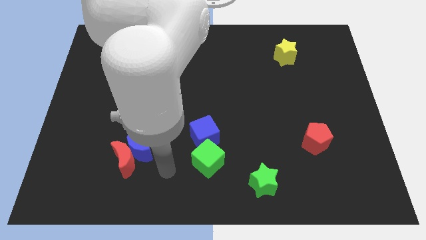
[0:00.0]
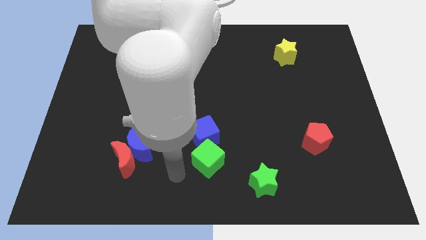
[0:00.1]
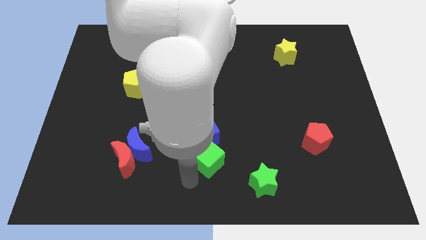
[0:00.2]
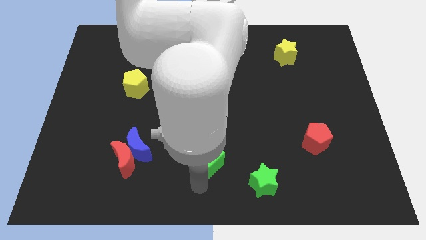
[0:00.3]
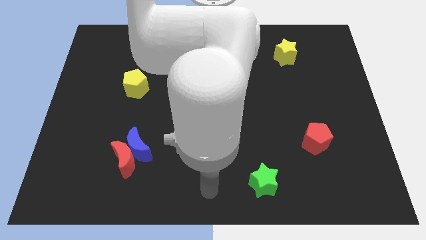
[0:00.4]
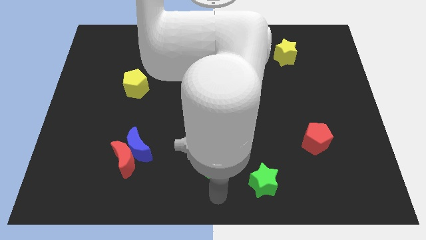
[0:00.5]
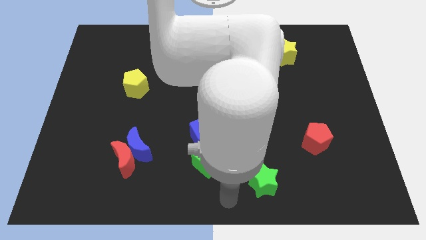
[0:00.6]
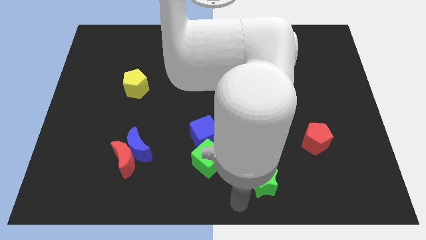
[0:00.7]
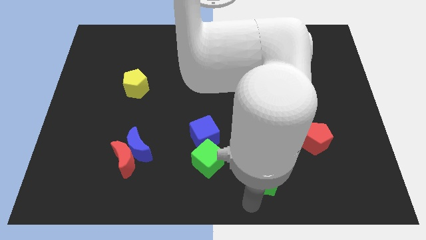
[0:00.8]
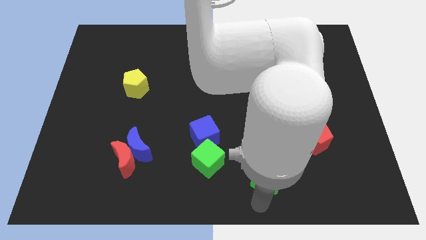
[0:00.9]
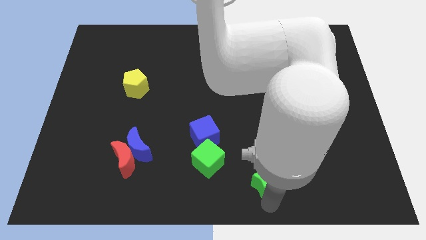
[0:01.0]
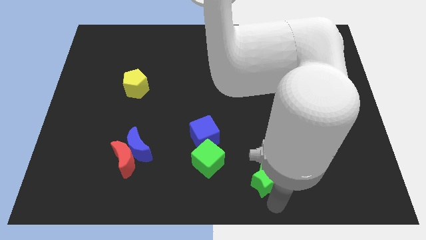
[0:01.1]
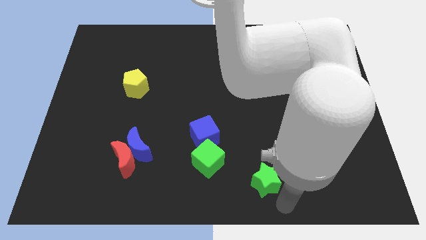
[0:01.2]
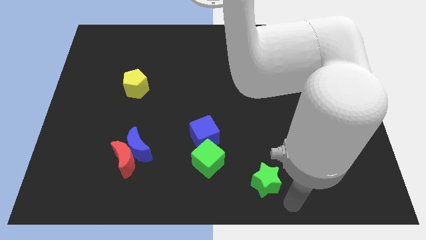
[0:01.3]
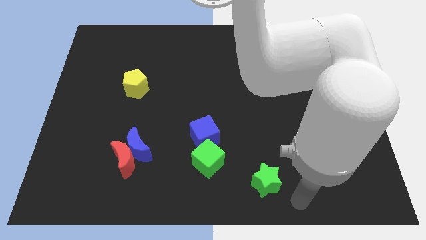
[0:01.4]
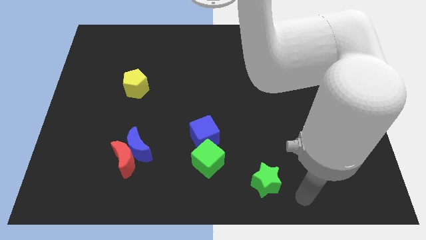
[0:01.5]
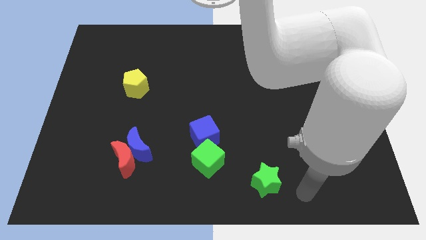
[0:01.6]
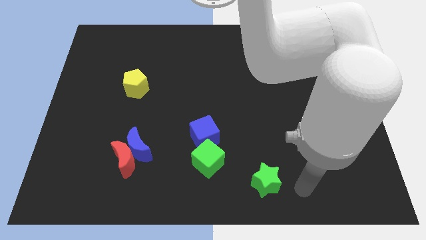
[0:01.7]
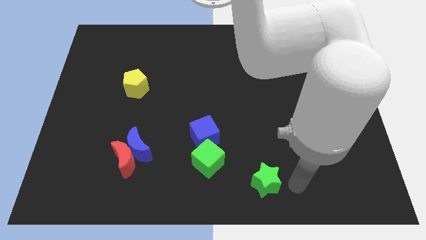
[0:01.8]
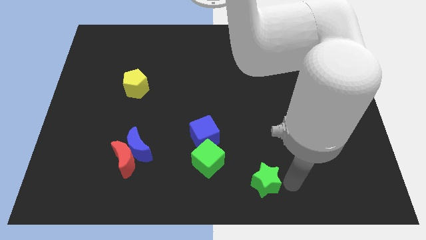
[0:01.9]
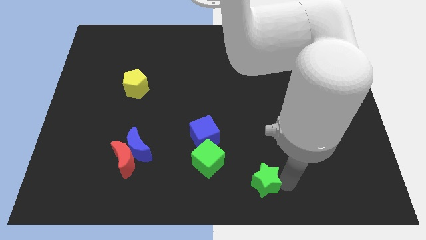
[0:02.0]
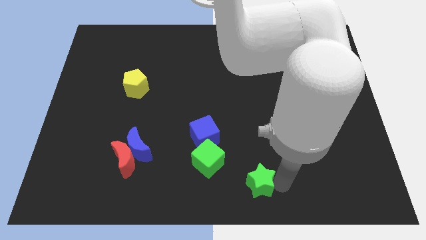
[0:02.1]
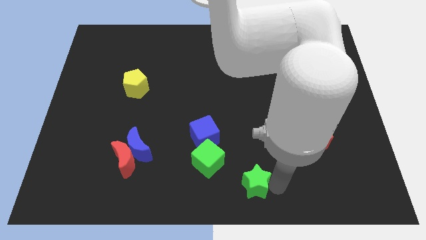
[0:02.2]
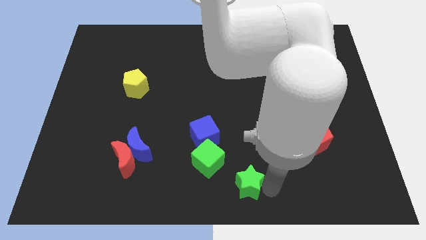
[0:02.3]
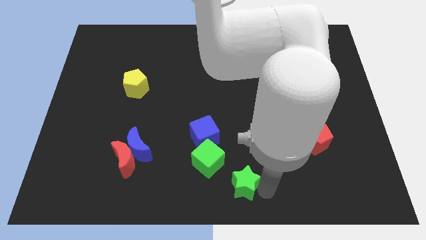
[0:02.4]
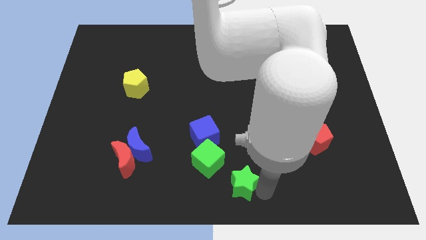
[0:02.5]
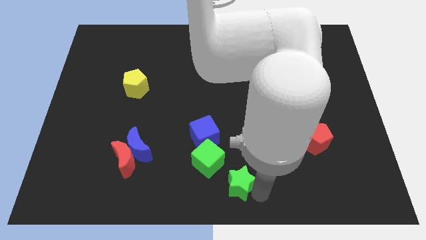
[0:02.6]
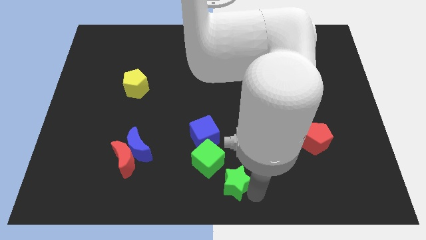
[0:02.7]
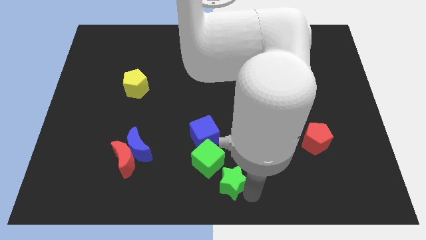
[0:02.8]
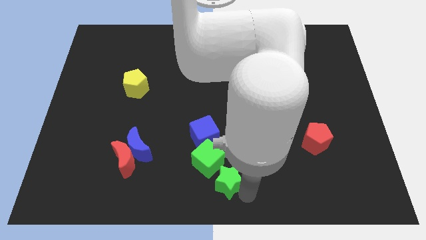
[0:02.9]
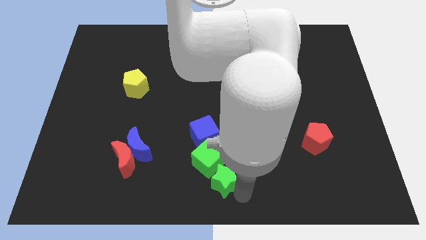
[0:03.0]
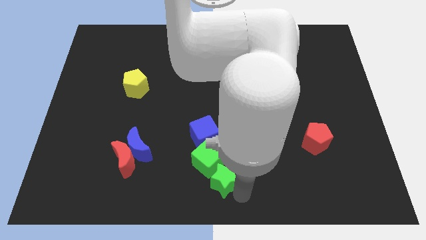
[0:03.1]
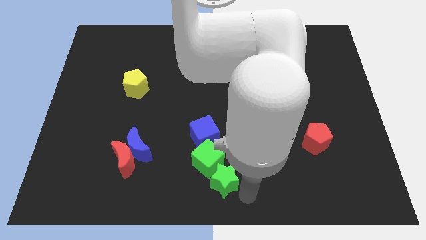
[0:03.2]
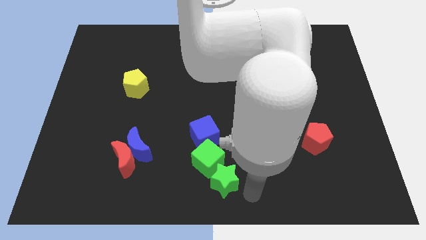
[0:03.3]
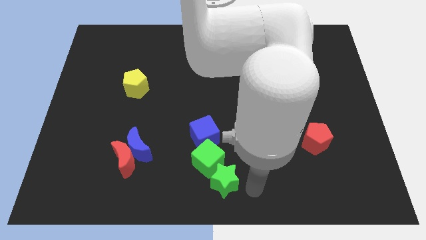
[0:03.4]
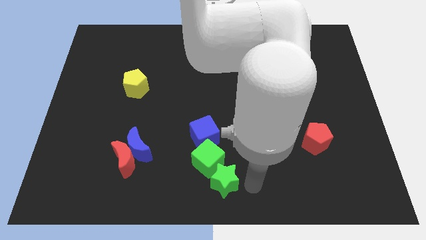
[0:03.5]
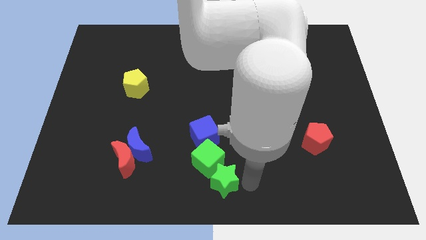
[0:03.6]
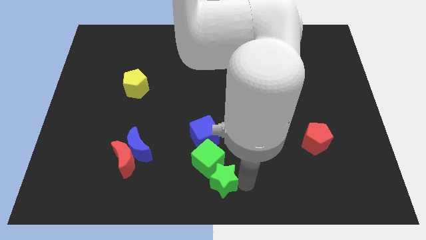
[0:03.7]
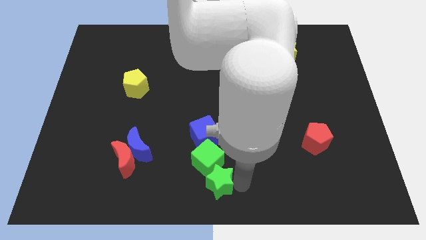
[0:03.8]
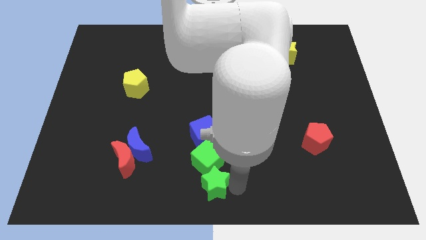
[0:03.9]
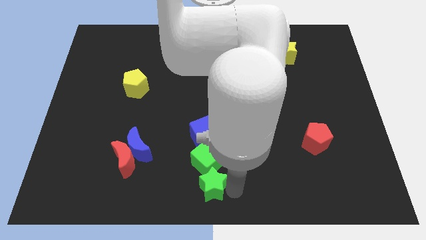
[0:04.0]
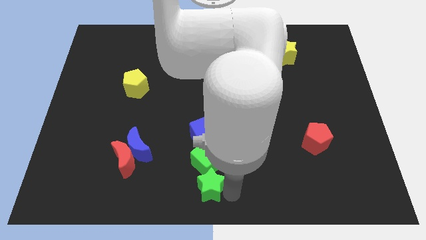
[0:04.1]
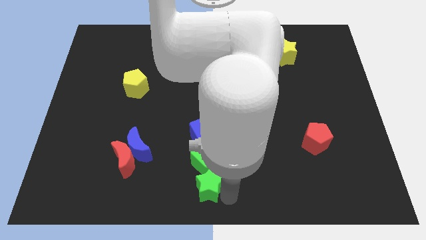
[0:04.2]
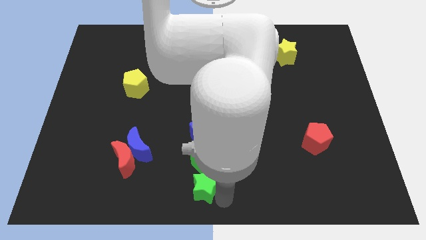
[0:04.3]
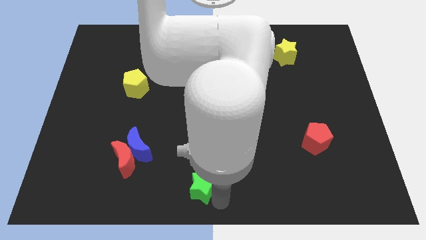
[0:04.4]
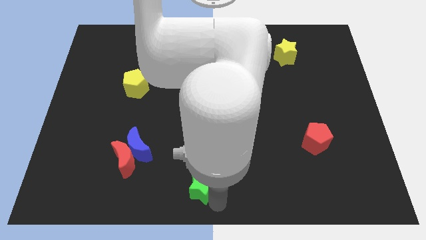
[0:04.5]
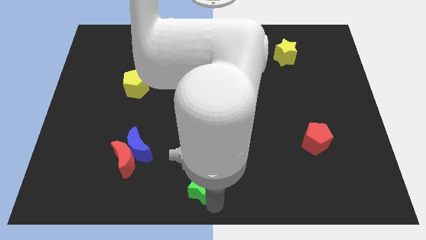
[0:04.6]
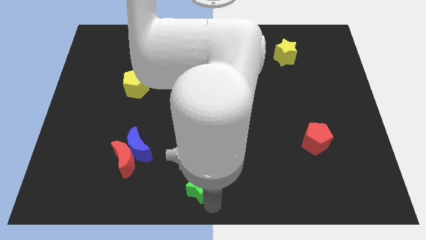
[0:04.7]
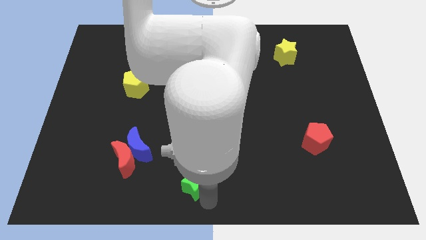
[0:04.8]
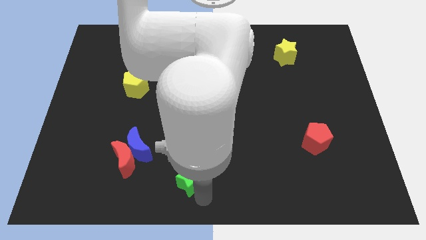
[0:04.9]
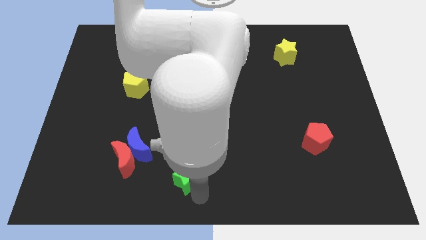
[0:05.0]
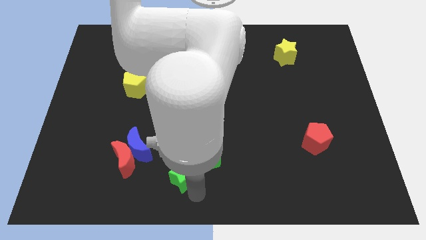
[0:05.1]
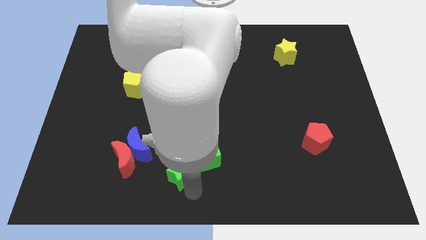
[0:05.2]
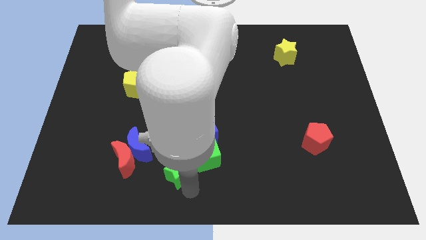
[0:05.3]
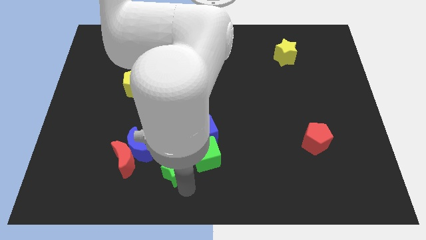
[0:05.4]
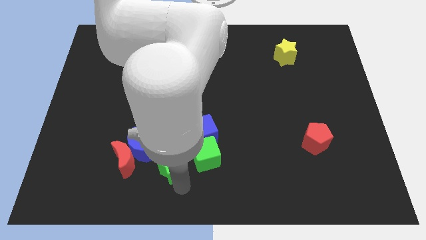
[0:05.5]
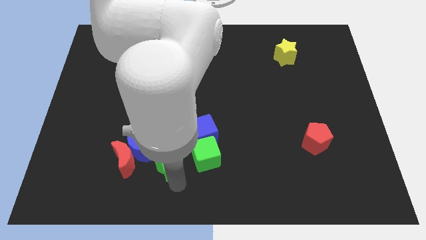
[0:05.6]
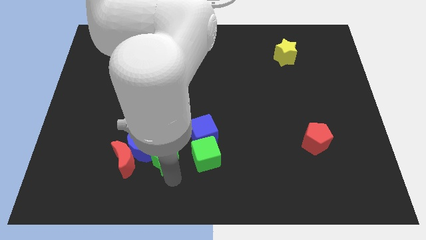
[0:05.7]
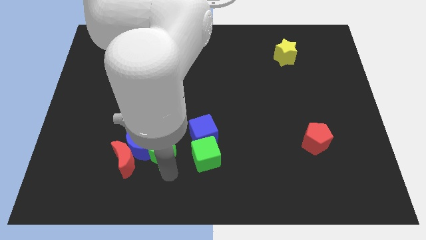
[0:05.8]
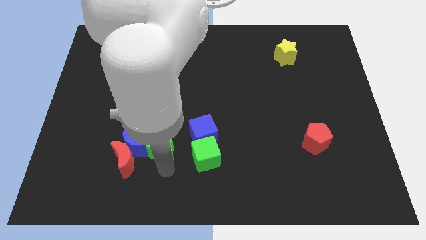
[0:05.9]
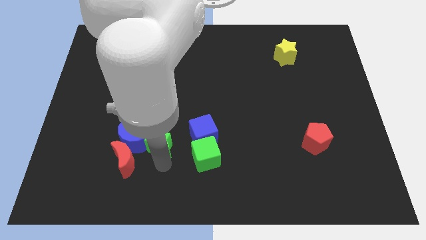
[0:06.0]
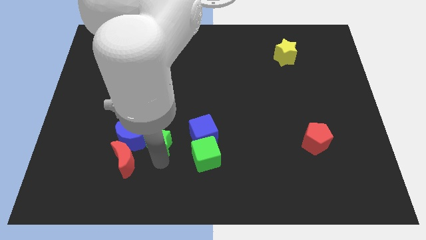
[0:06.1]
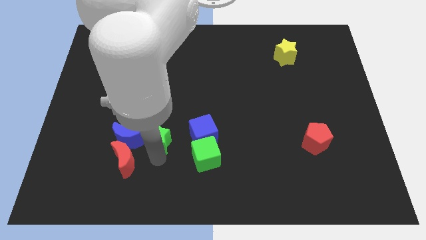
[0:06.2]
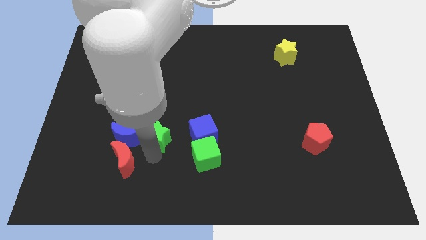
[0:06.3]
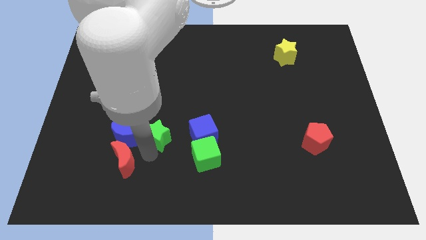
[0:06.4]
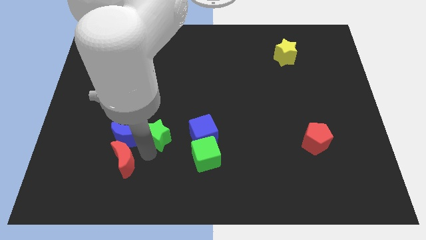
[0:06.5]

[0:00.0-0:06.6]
push the green star next to the blue moon

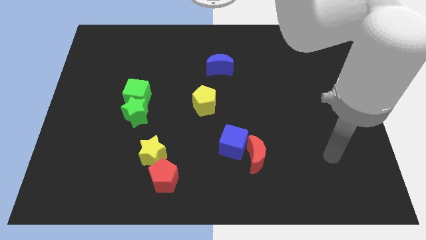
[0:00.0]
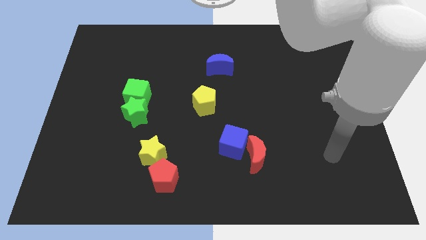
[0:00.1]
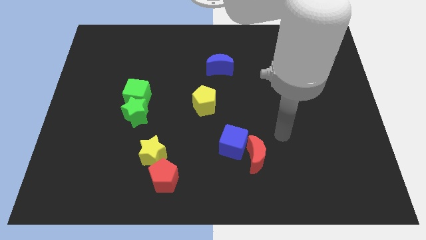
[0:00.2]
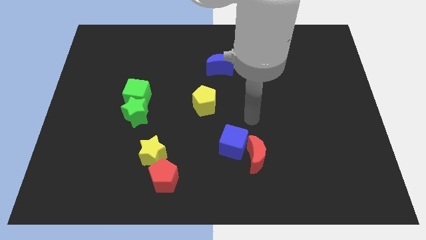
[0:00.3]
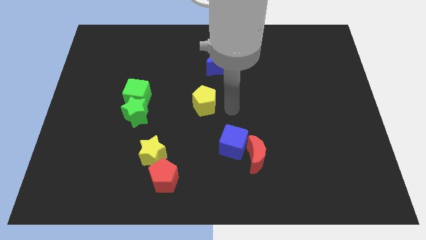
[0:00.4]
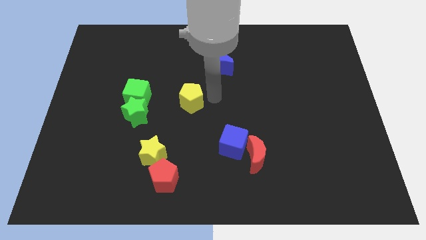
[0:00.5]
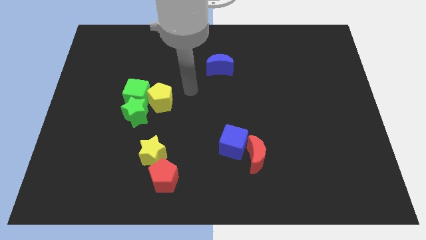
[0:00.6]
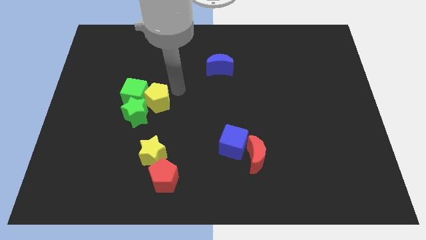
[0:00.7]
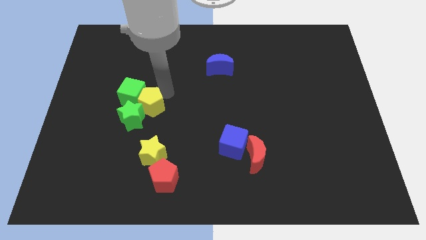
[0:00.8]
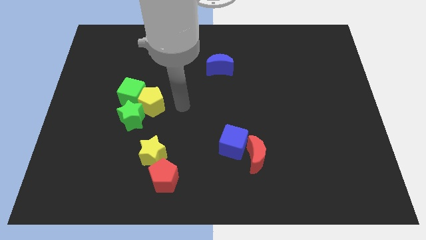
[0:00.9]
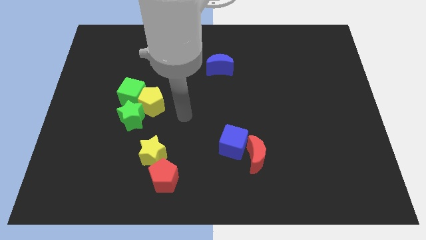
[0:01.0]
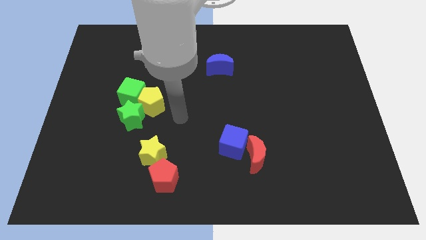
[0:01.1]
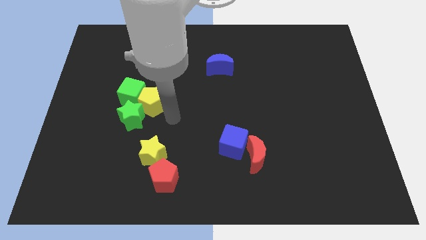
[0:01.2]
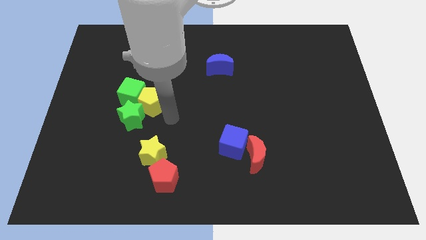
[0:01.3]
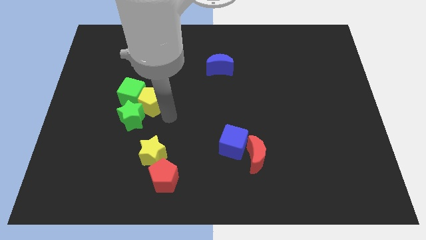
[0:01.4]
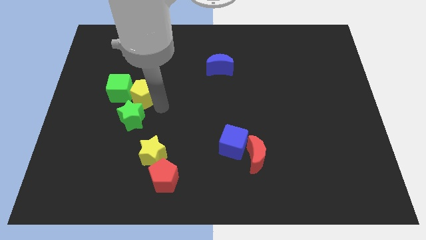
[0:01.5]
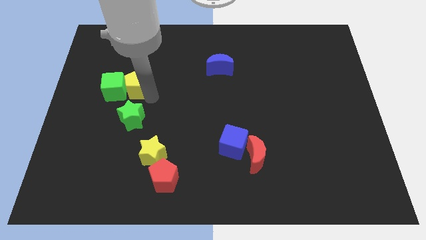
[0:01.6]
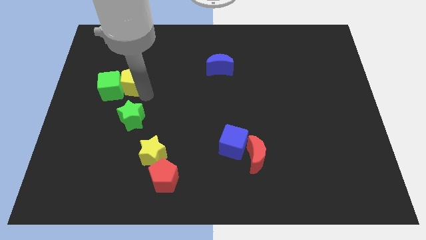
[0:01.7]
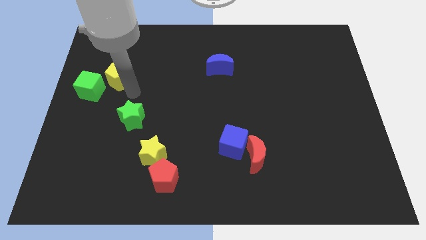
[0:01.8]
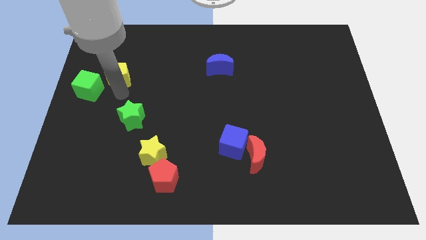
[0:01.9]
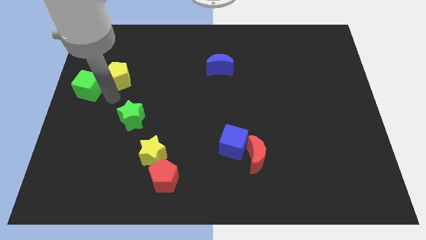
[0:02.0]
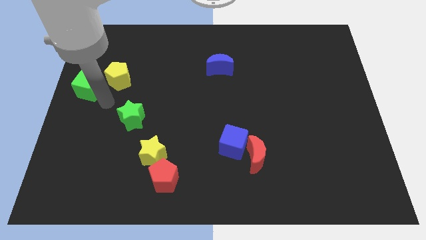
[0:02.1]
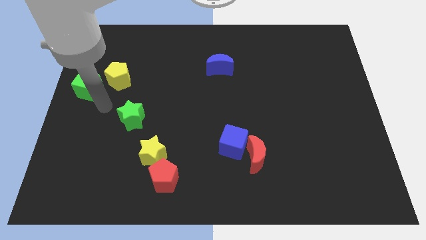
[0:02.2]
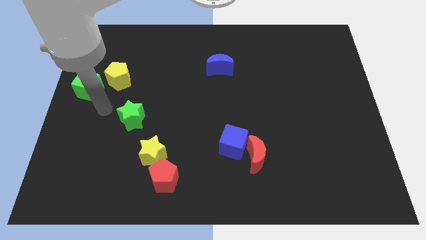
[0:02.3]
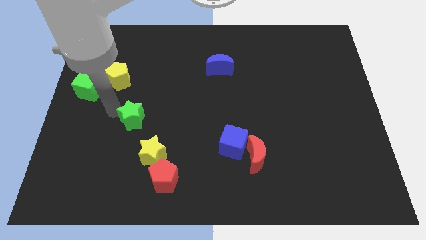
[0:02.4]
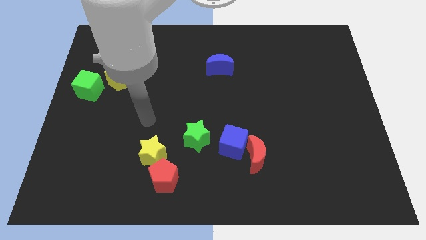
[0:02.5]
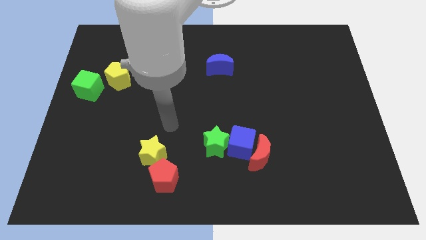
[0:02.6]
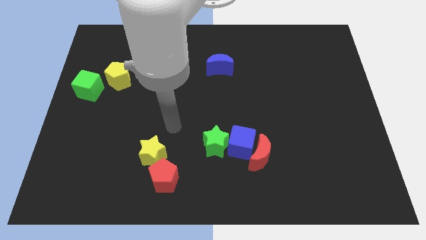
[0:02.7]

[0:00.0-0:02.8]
move the green star to the blue cube
